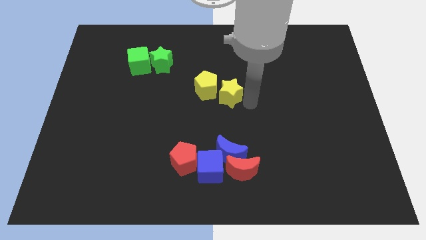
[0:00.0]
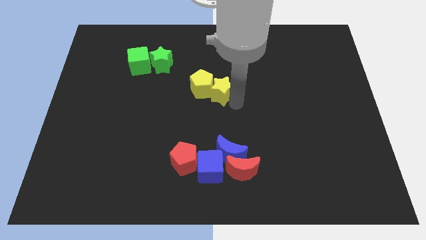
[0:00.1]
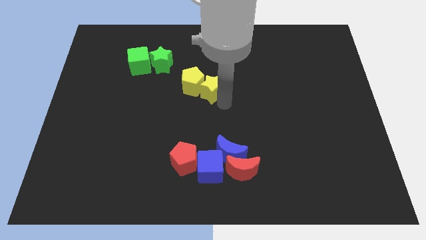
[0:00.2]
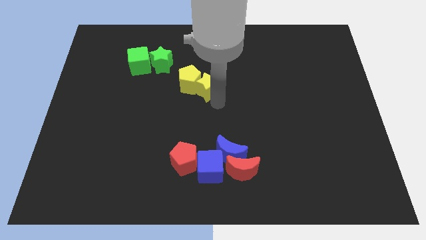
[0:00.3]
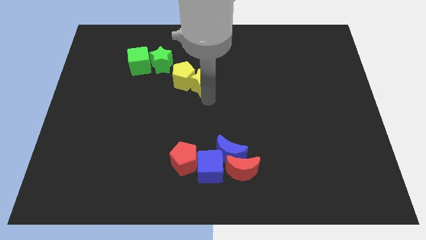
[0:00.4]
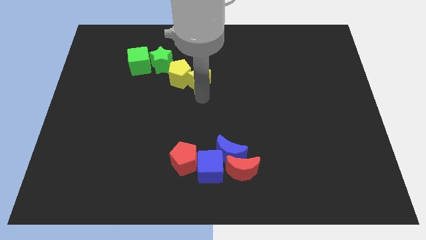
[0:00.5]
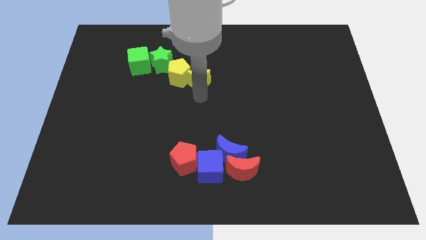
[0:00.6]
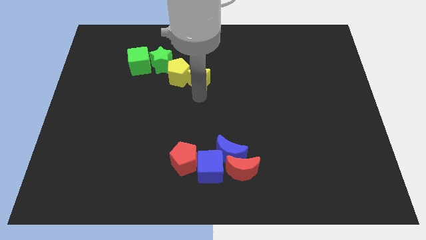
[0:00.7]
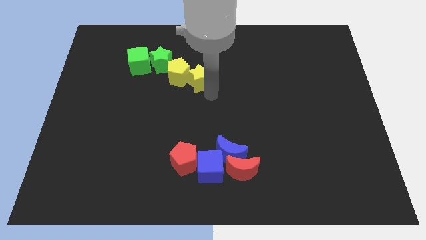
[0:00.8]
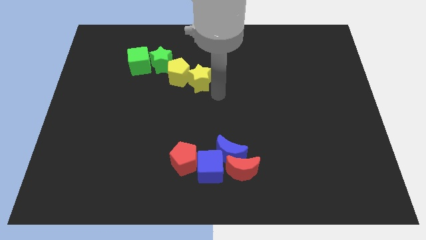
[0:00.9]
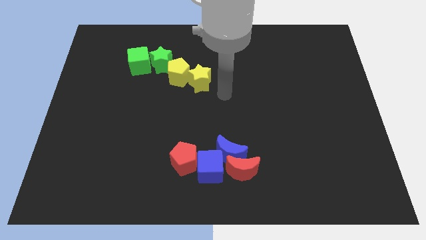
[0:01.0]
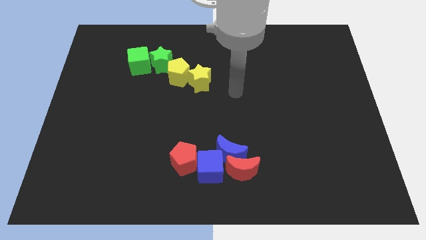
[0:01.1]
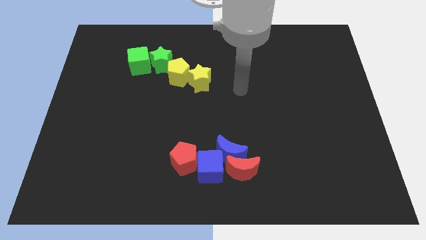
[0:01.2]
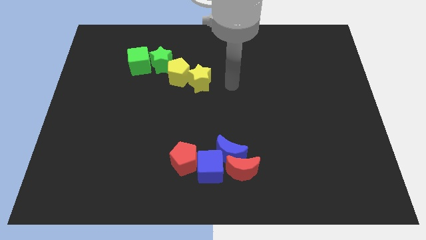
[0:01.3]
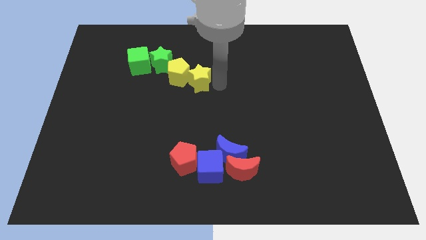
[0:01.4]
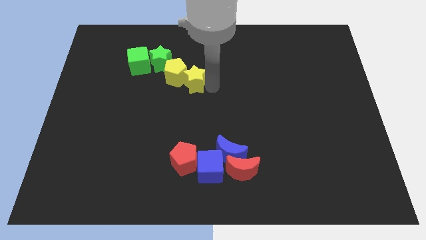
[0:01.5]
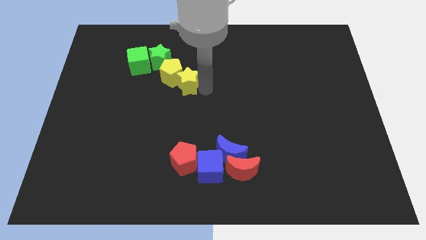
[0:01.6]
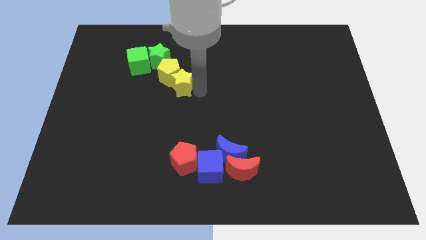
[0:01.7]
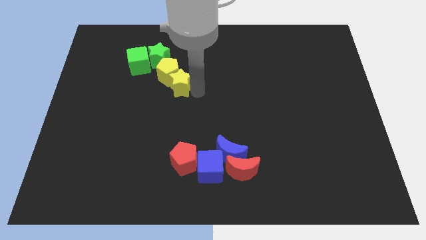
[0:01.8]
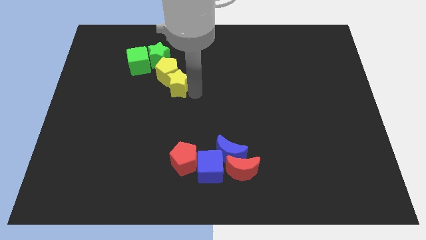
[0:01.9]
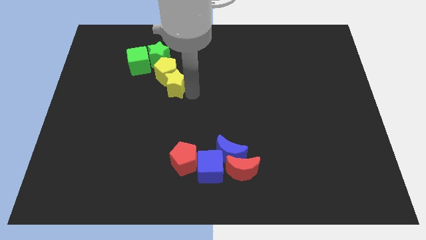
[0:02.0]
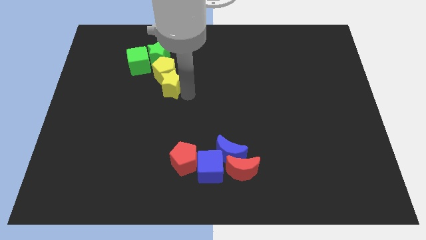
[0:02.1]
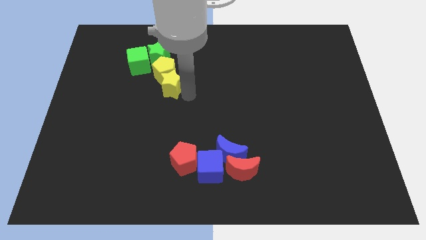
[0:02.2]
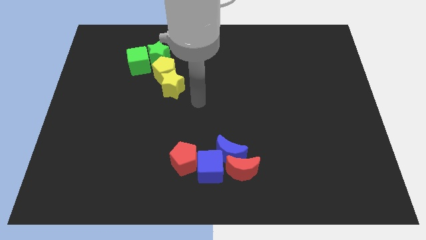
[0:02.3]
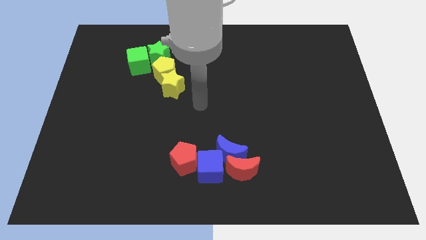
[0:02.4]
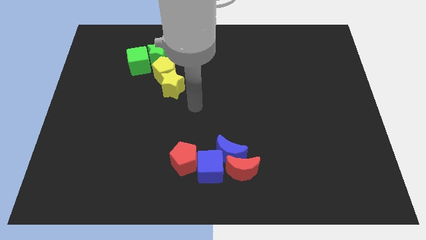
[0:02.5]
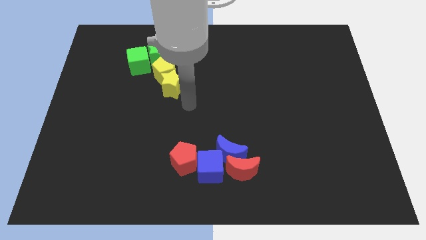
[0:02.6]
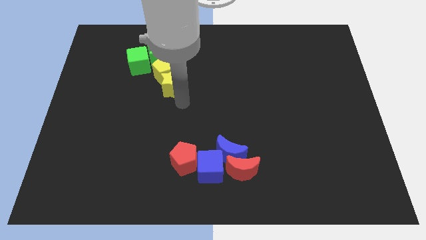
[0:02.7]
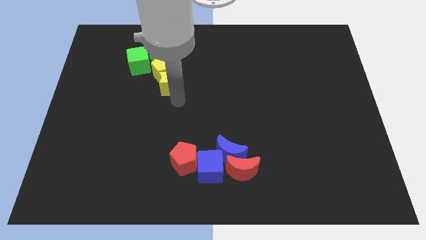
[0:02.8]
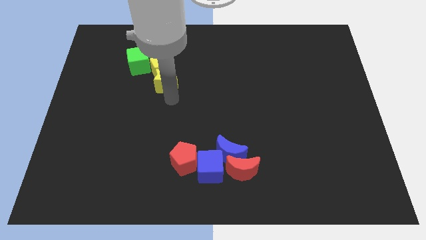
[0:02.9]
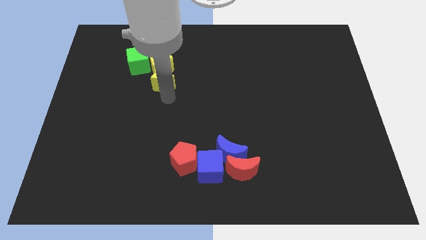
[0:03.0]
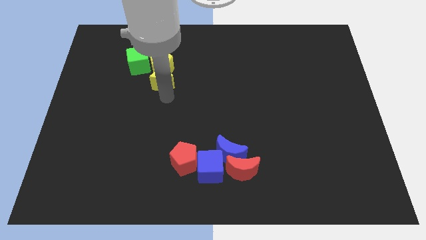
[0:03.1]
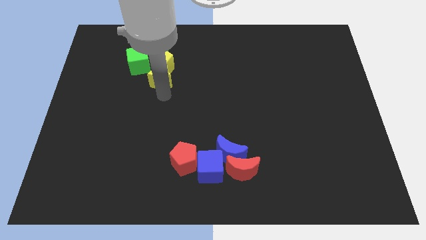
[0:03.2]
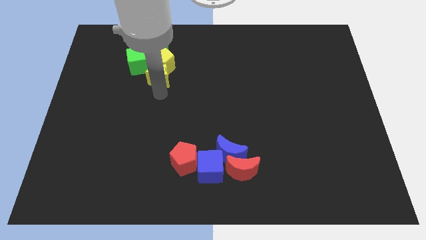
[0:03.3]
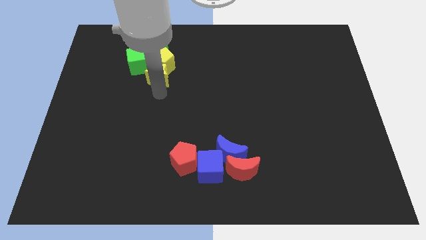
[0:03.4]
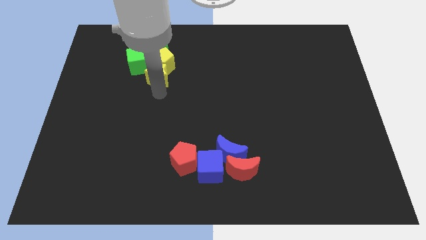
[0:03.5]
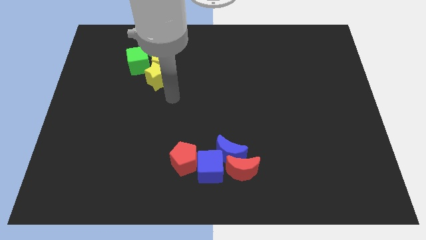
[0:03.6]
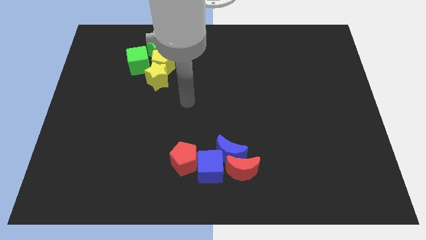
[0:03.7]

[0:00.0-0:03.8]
push the group of yellow blocks at the bottom of the green star

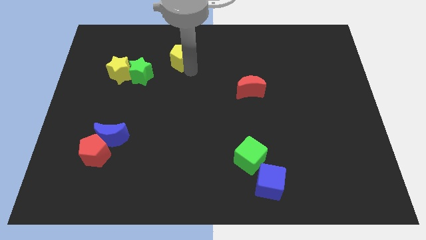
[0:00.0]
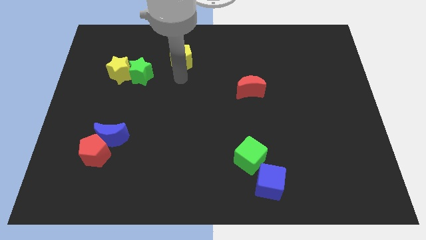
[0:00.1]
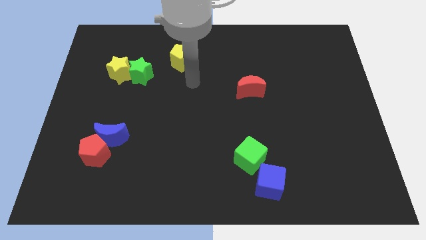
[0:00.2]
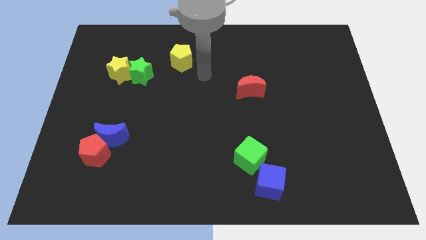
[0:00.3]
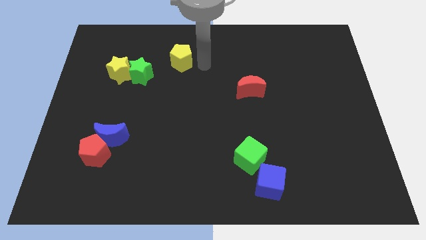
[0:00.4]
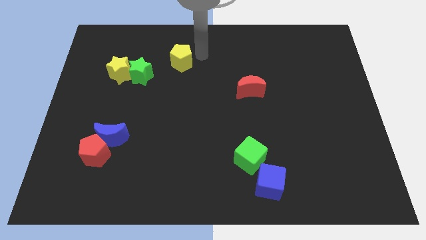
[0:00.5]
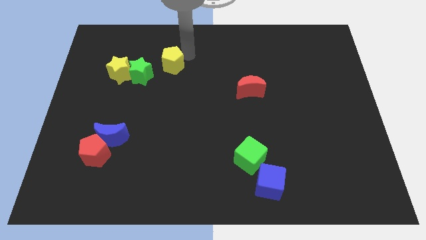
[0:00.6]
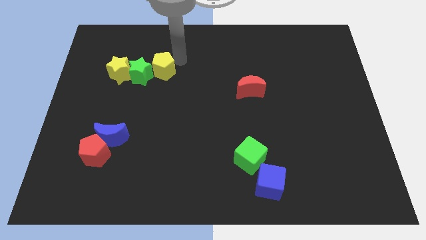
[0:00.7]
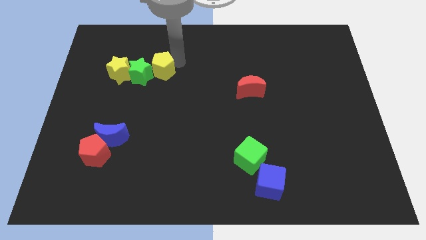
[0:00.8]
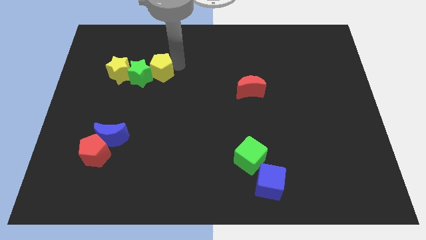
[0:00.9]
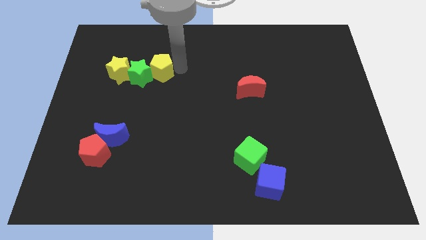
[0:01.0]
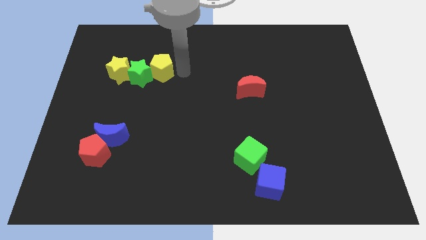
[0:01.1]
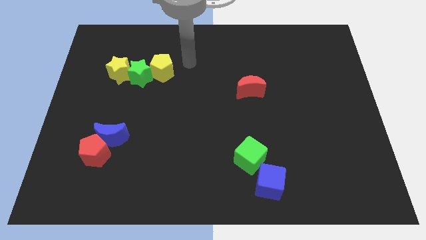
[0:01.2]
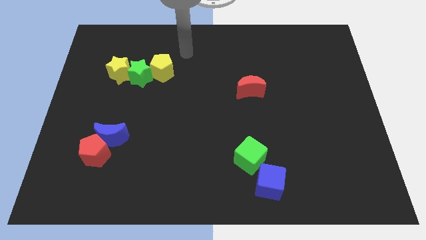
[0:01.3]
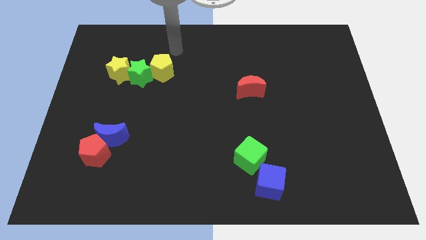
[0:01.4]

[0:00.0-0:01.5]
place yellow pentagon right to the green star

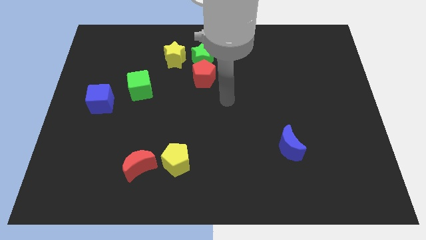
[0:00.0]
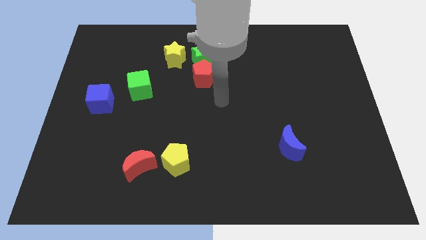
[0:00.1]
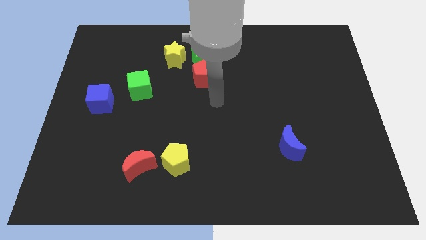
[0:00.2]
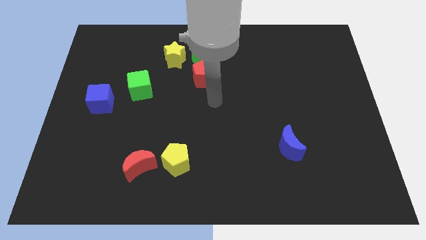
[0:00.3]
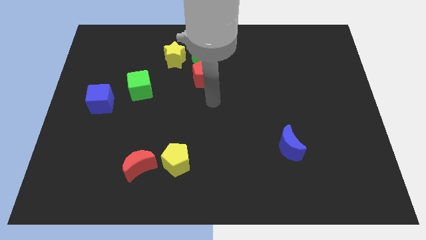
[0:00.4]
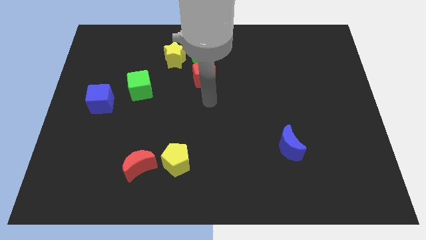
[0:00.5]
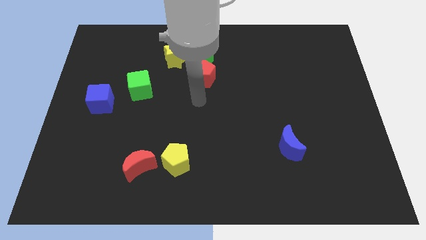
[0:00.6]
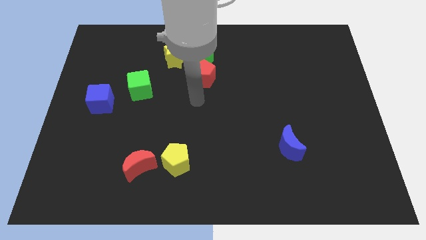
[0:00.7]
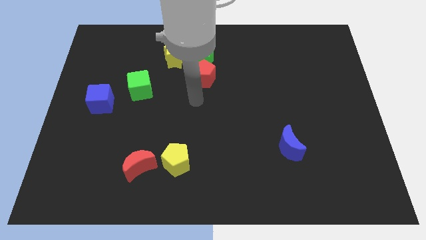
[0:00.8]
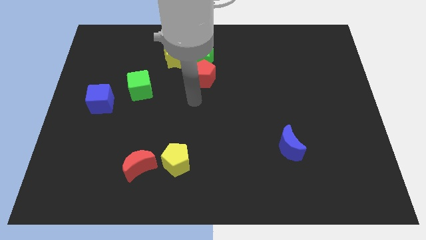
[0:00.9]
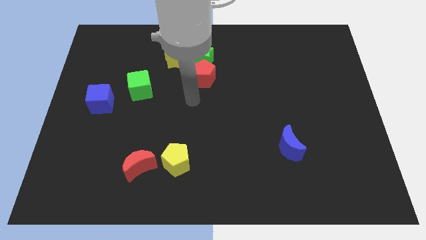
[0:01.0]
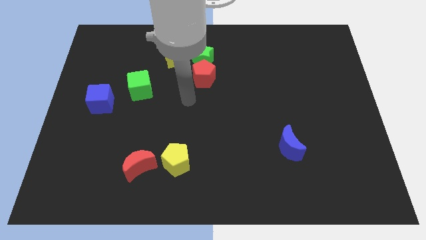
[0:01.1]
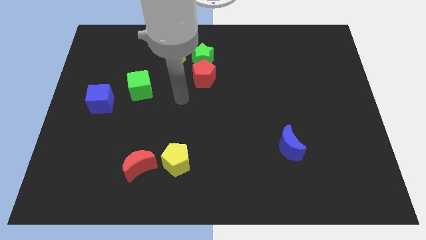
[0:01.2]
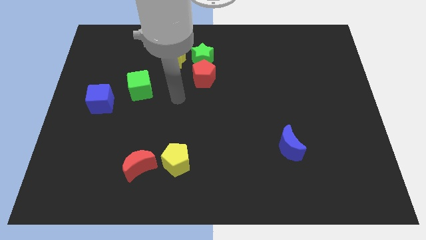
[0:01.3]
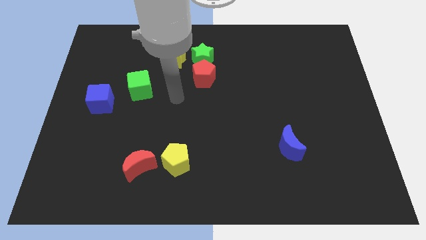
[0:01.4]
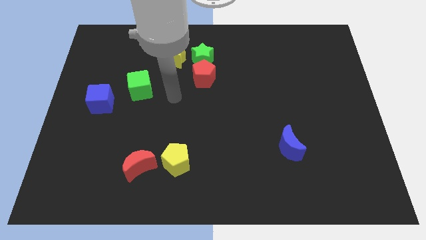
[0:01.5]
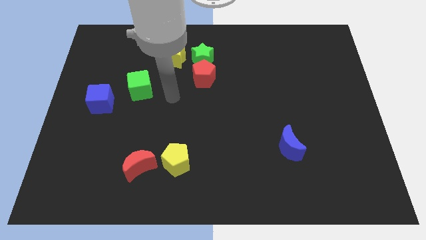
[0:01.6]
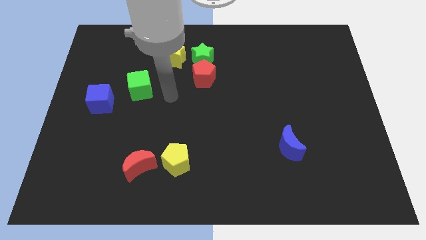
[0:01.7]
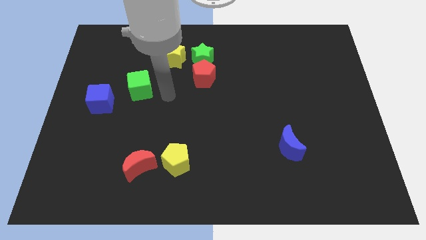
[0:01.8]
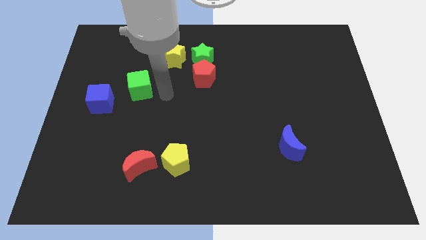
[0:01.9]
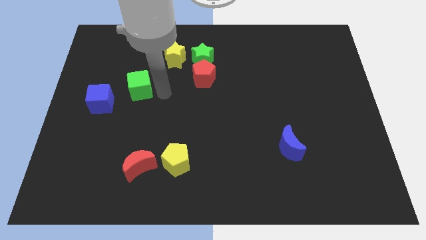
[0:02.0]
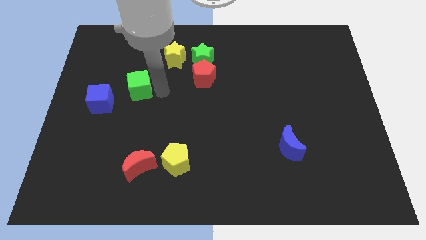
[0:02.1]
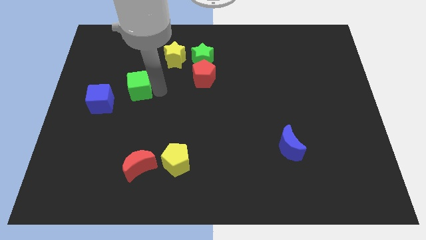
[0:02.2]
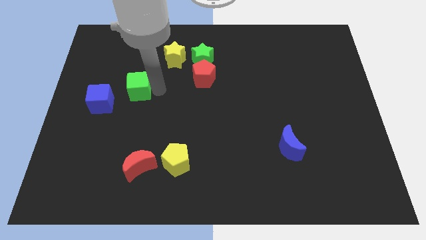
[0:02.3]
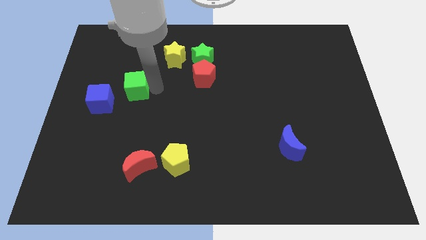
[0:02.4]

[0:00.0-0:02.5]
touch the green cube on the right side

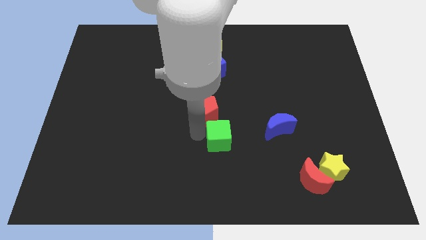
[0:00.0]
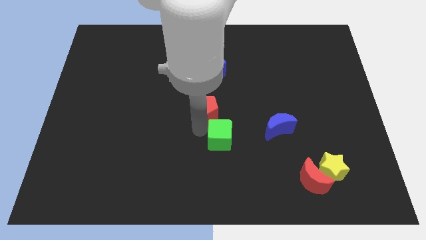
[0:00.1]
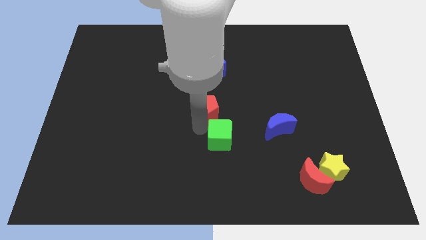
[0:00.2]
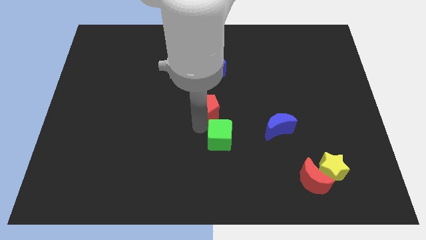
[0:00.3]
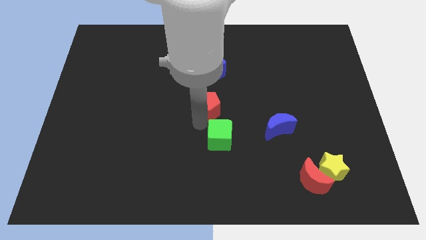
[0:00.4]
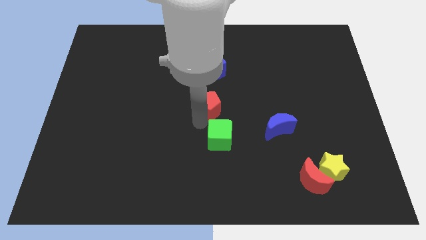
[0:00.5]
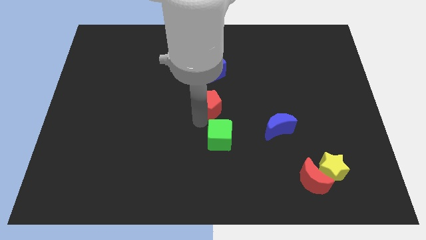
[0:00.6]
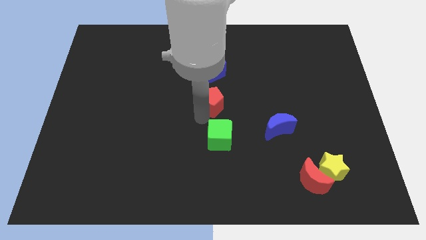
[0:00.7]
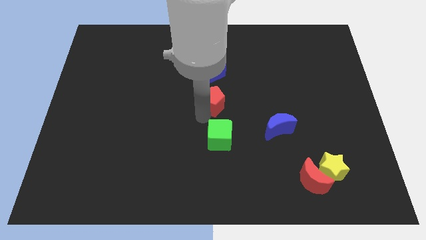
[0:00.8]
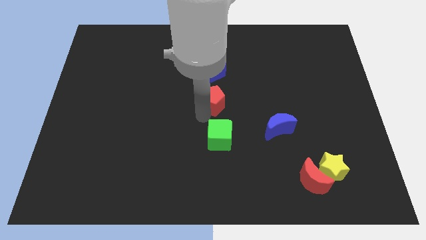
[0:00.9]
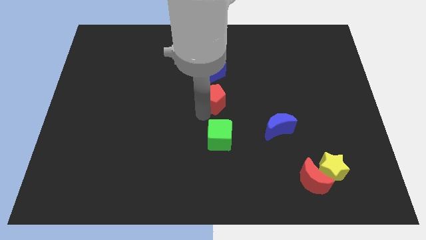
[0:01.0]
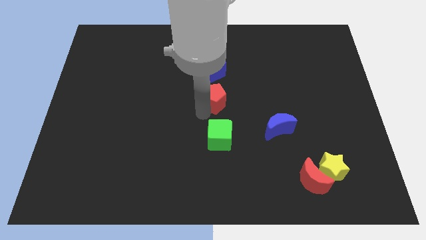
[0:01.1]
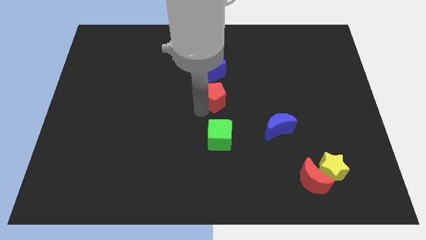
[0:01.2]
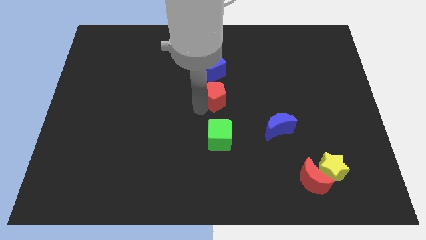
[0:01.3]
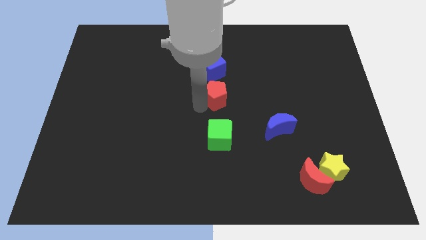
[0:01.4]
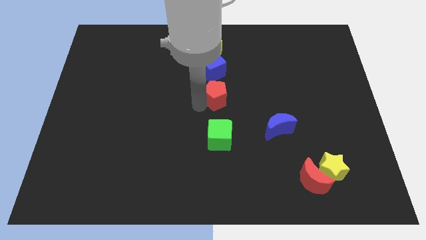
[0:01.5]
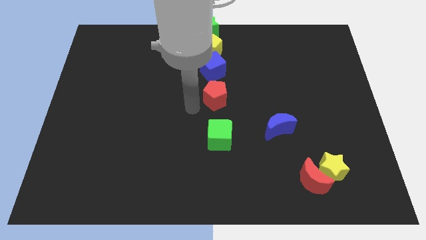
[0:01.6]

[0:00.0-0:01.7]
move the red pentagon towards blue cube
